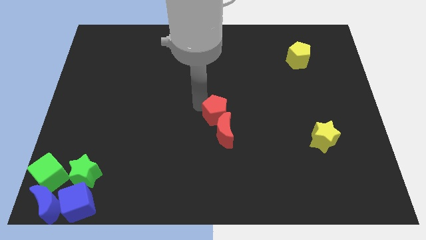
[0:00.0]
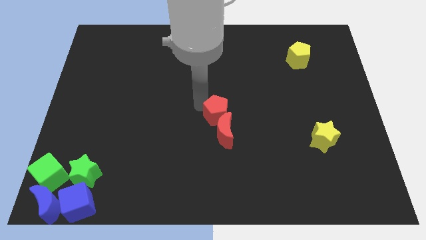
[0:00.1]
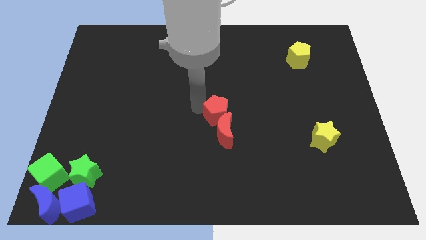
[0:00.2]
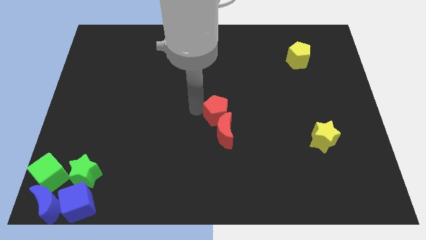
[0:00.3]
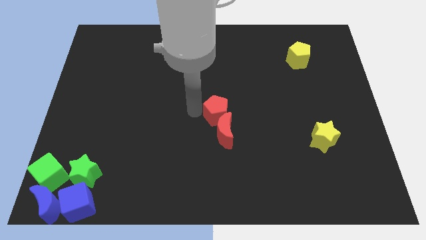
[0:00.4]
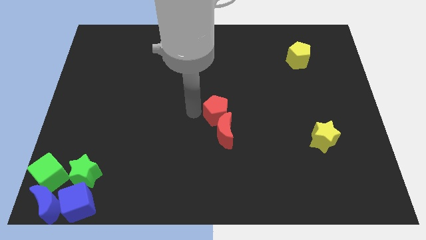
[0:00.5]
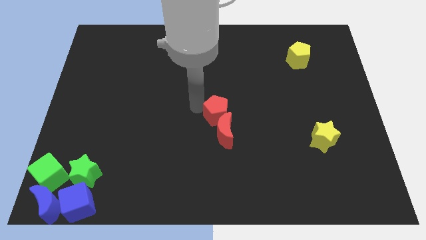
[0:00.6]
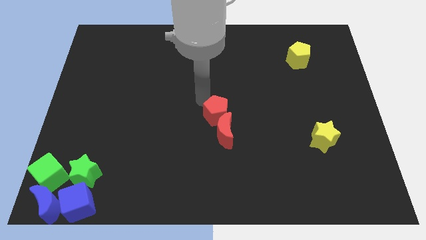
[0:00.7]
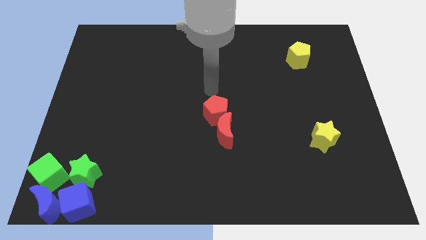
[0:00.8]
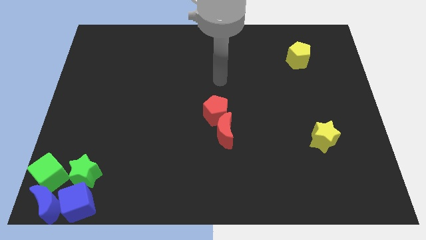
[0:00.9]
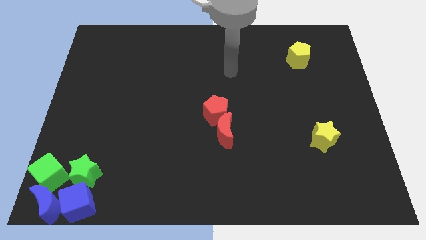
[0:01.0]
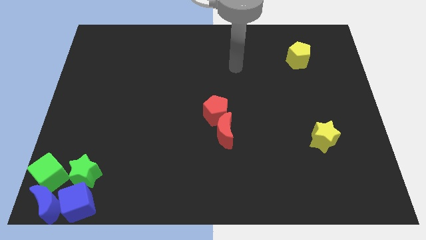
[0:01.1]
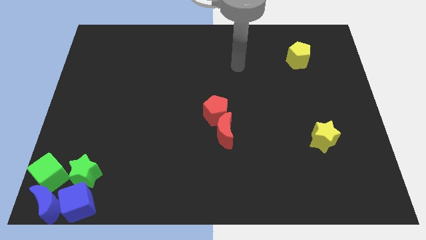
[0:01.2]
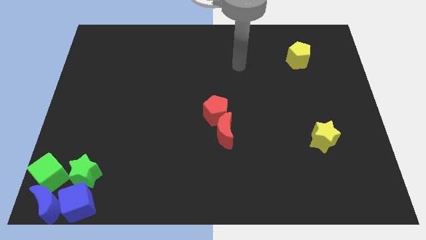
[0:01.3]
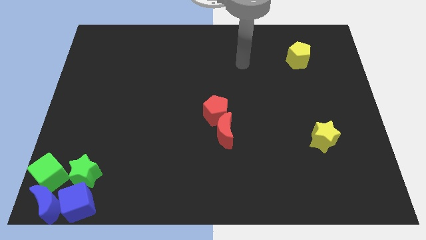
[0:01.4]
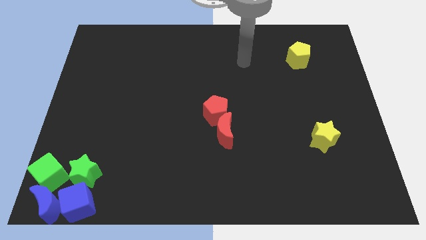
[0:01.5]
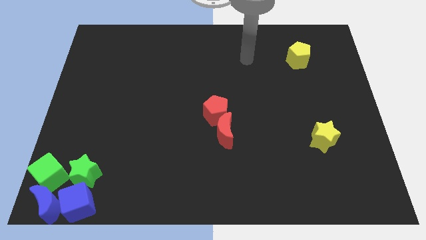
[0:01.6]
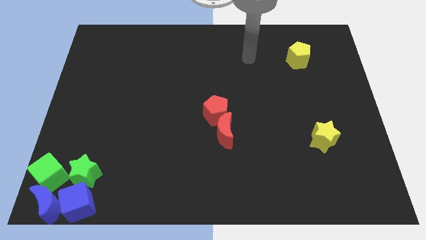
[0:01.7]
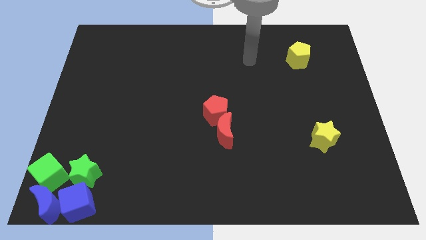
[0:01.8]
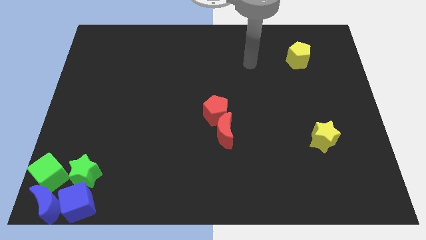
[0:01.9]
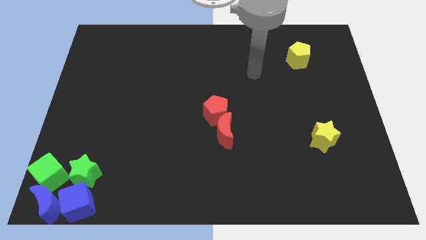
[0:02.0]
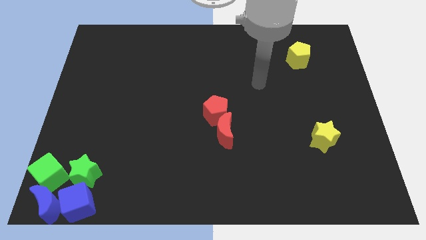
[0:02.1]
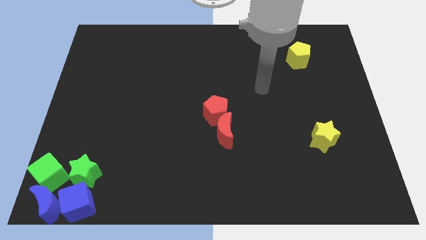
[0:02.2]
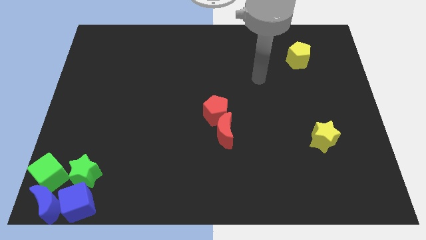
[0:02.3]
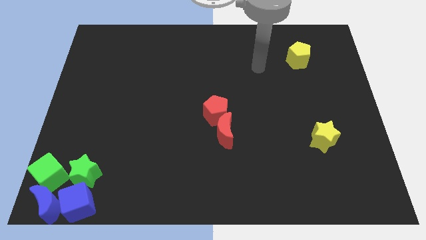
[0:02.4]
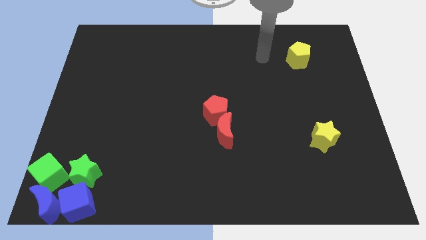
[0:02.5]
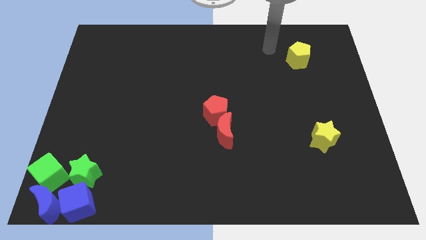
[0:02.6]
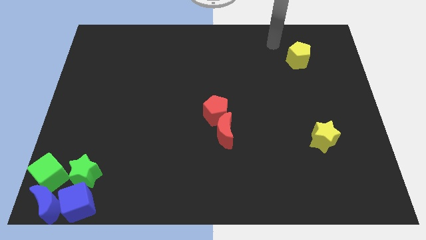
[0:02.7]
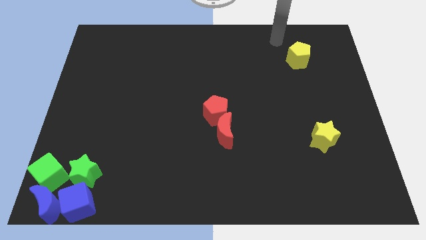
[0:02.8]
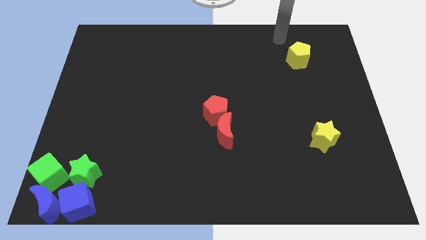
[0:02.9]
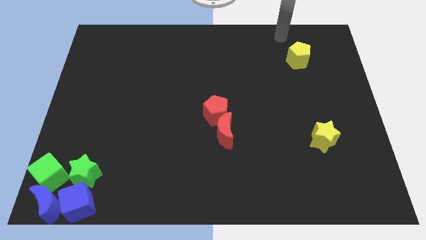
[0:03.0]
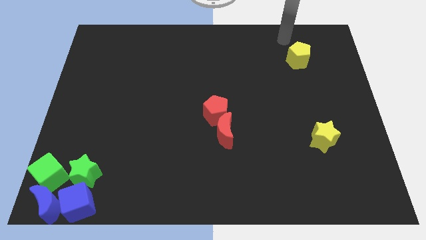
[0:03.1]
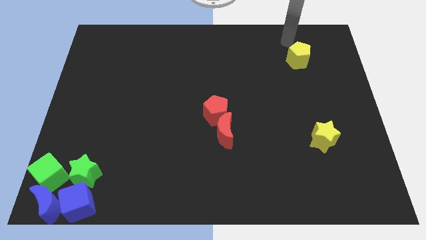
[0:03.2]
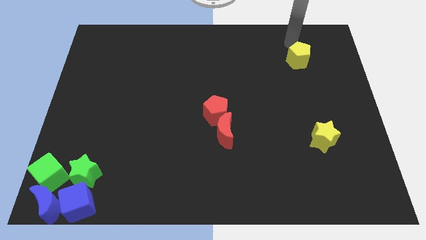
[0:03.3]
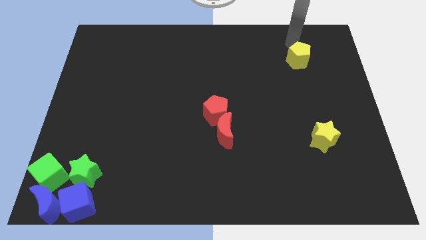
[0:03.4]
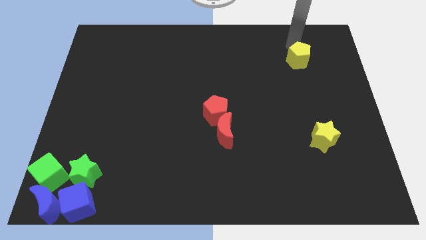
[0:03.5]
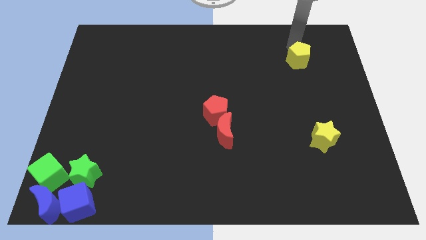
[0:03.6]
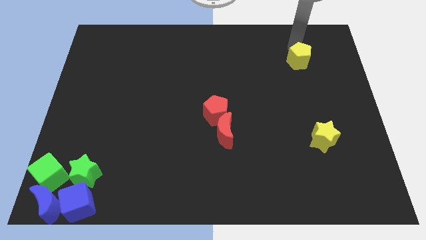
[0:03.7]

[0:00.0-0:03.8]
move your arm towards yellow pentagon

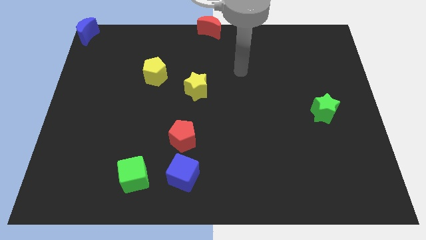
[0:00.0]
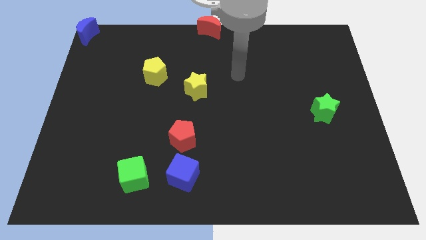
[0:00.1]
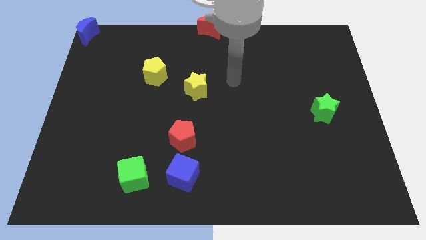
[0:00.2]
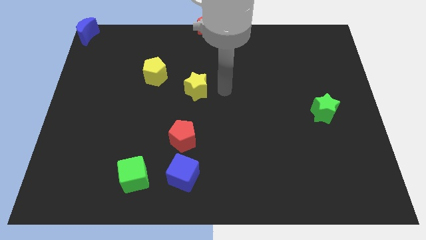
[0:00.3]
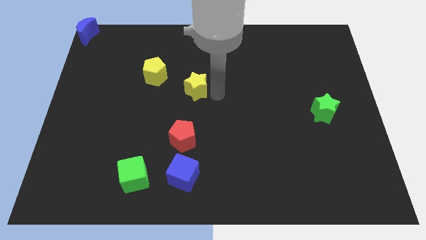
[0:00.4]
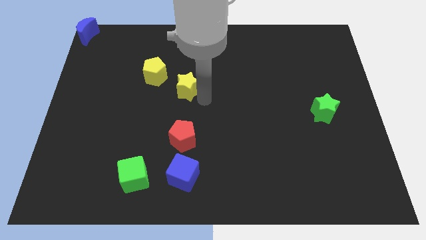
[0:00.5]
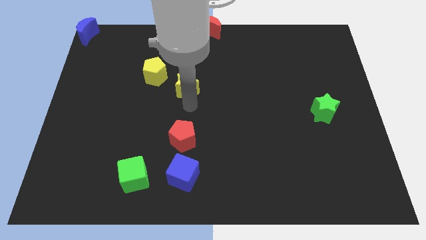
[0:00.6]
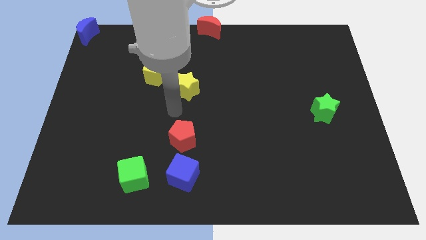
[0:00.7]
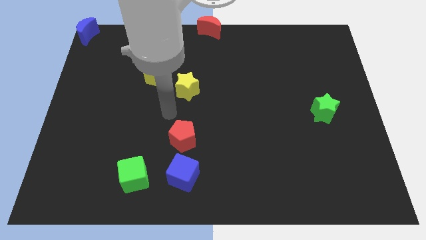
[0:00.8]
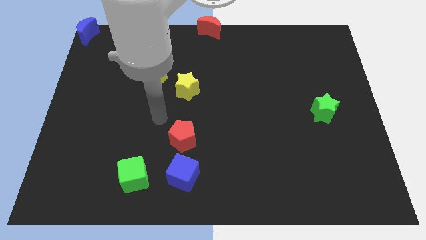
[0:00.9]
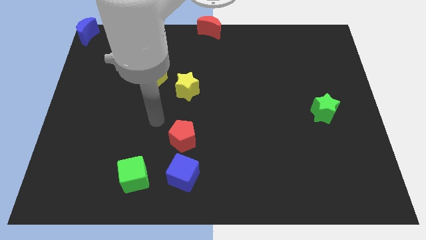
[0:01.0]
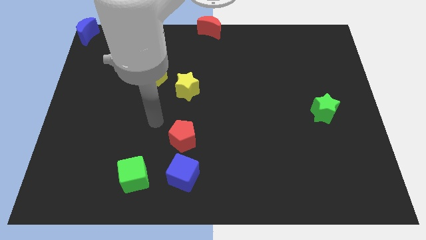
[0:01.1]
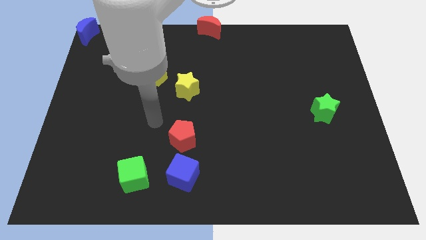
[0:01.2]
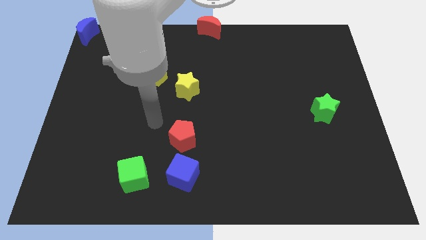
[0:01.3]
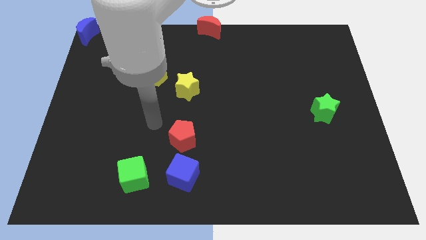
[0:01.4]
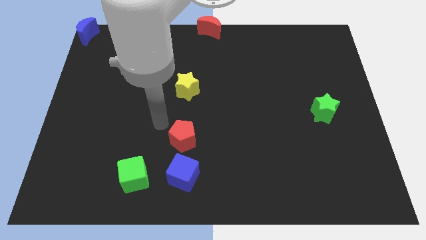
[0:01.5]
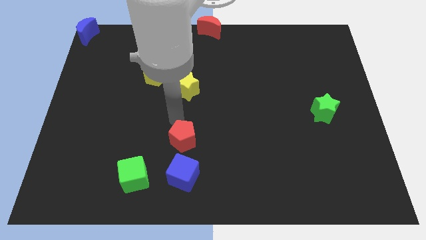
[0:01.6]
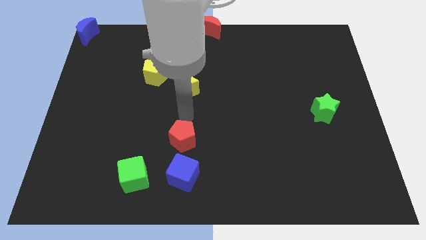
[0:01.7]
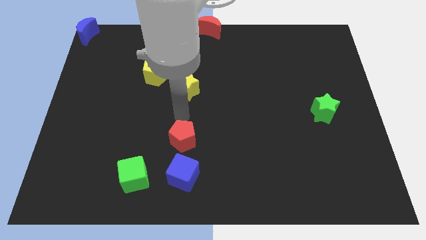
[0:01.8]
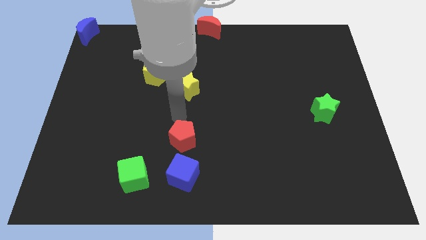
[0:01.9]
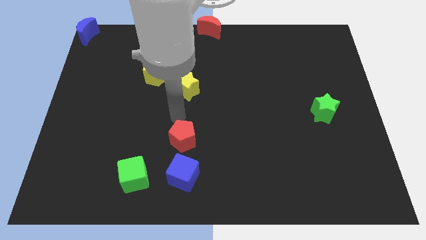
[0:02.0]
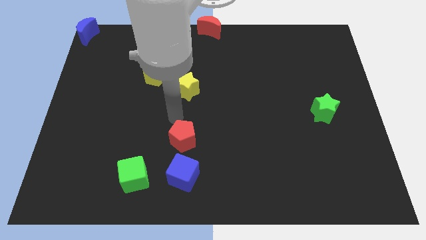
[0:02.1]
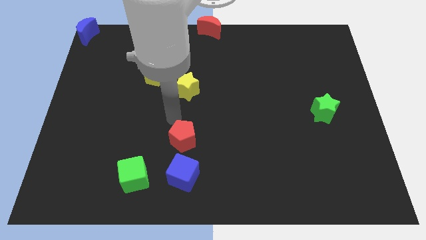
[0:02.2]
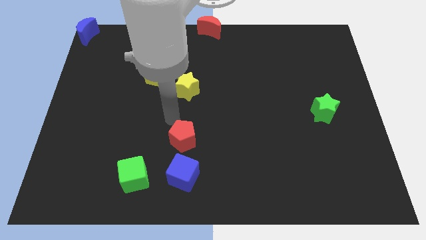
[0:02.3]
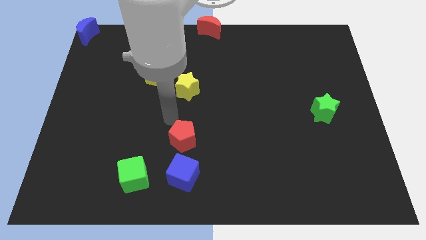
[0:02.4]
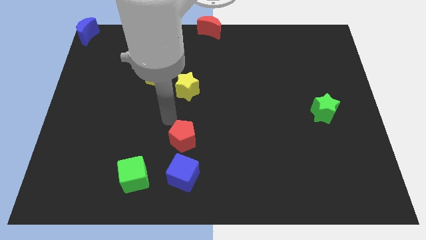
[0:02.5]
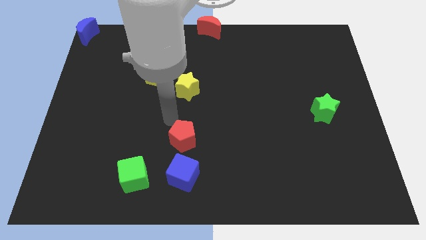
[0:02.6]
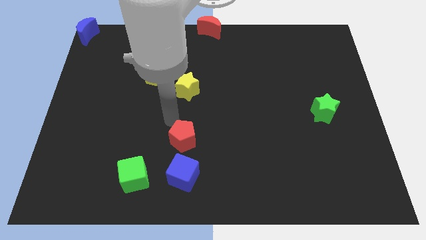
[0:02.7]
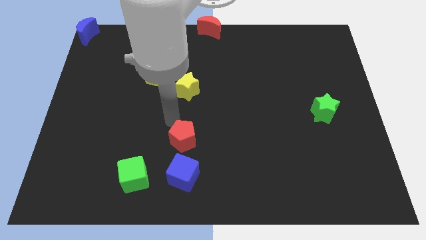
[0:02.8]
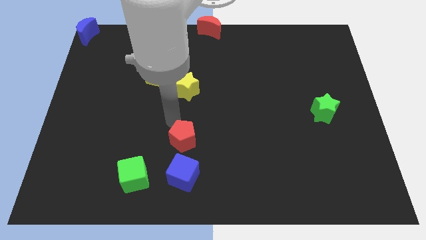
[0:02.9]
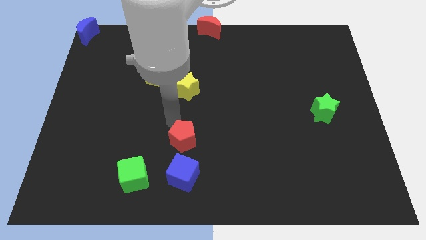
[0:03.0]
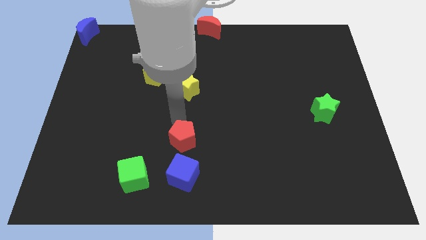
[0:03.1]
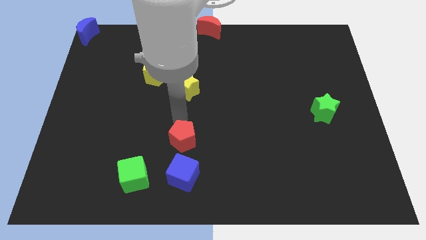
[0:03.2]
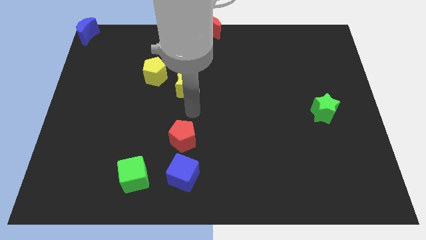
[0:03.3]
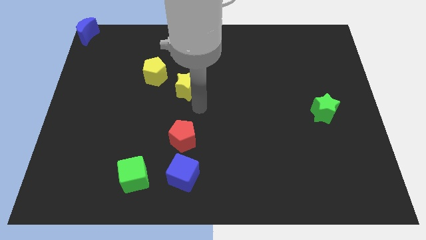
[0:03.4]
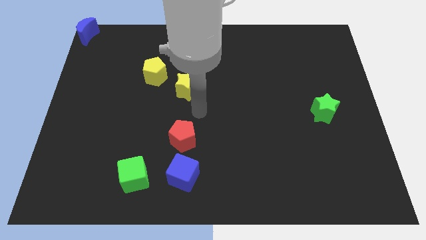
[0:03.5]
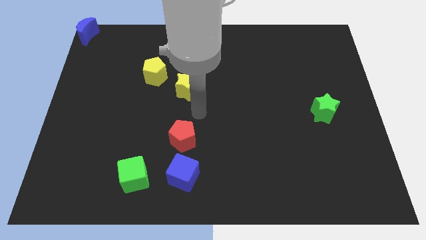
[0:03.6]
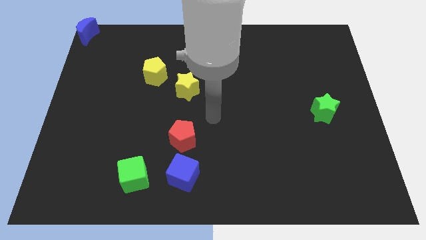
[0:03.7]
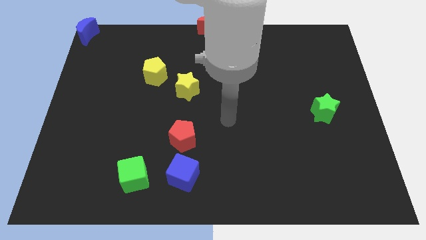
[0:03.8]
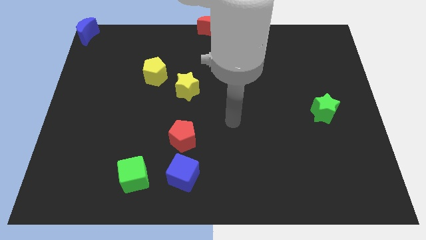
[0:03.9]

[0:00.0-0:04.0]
move the yellow star slightly to the left

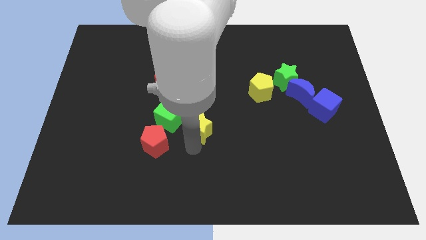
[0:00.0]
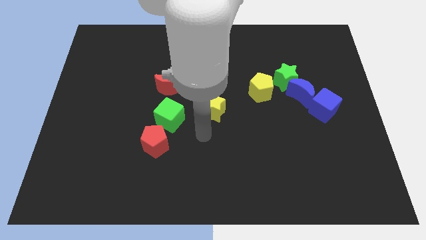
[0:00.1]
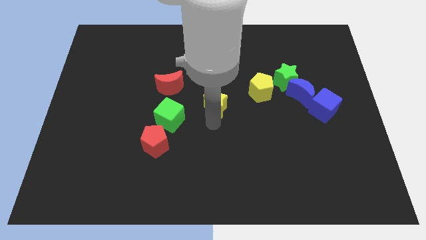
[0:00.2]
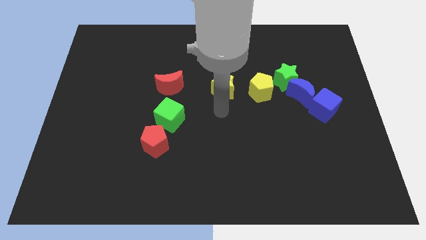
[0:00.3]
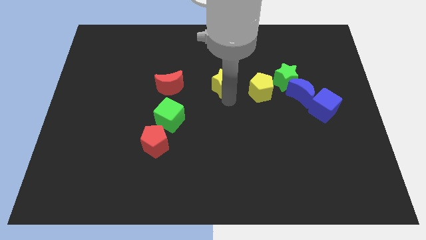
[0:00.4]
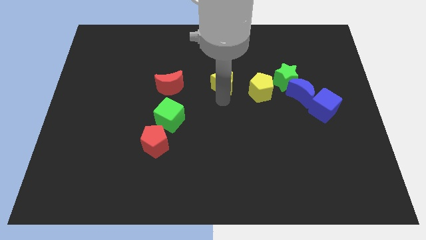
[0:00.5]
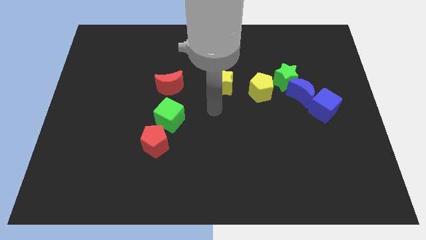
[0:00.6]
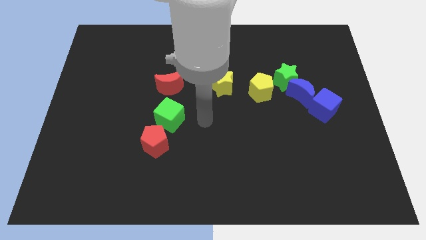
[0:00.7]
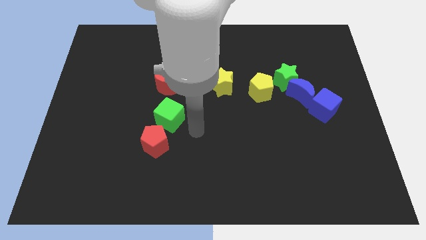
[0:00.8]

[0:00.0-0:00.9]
push yellow star beside yellow pentagon

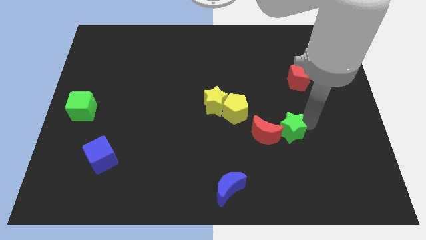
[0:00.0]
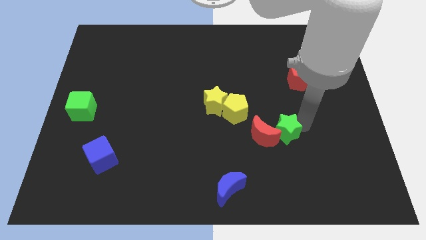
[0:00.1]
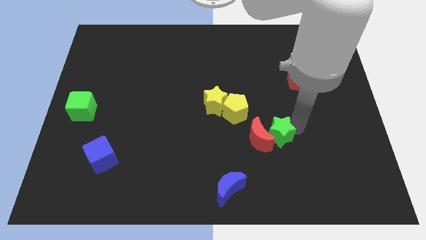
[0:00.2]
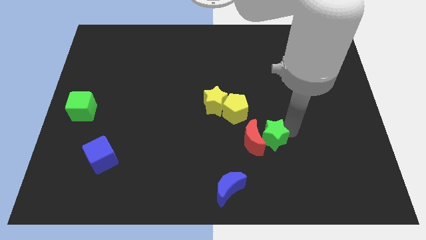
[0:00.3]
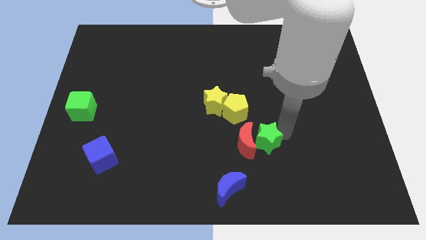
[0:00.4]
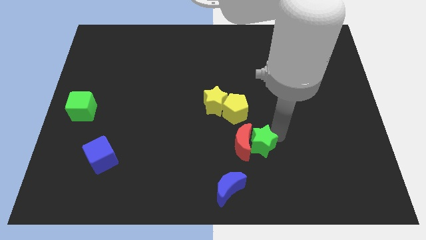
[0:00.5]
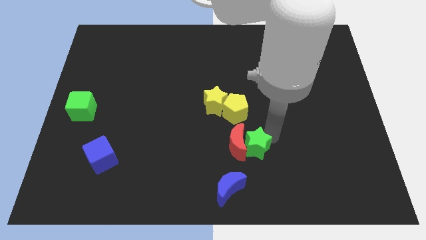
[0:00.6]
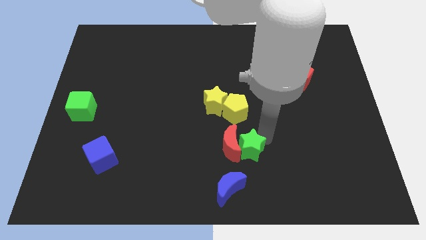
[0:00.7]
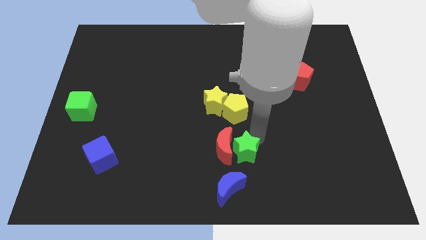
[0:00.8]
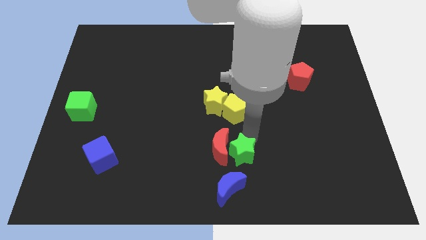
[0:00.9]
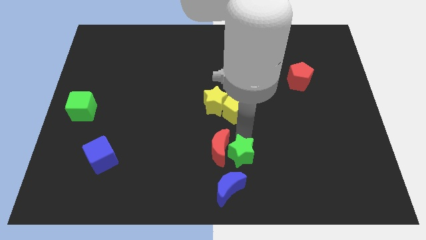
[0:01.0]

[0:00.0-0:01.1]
move the green star to the right of the red crescent
